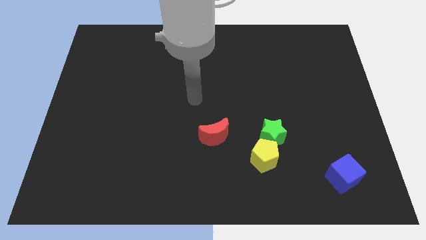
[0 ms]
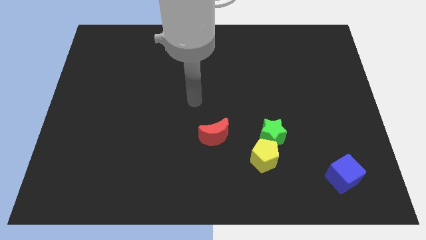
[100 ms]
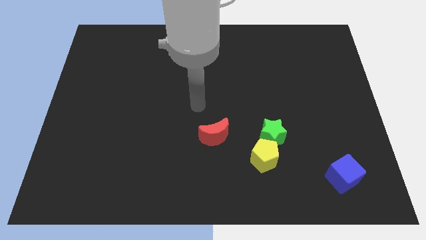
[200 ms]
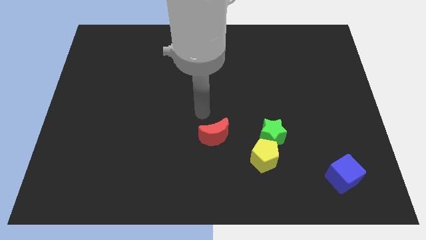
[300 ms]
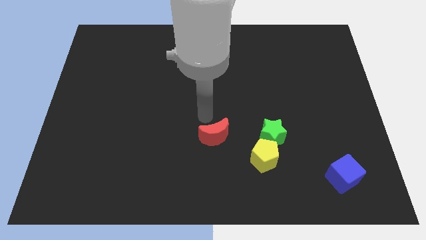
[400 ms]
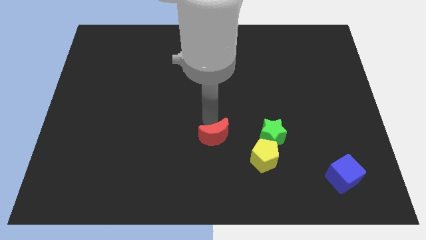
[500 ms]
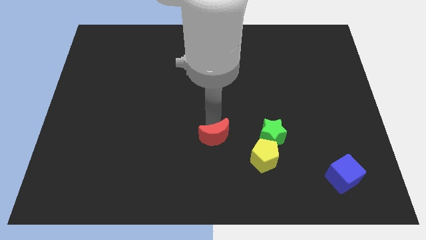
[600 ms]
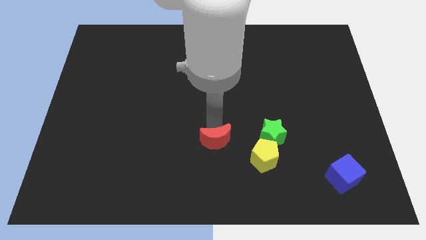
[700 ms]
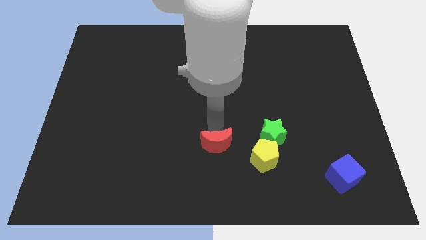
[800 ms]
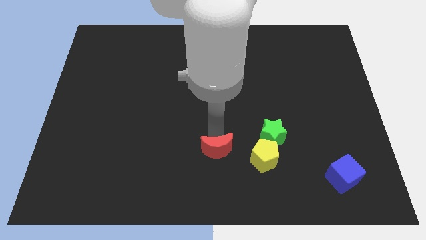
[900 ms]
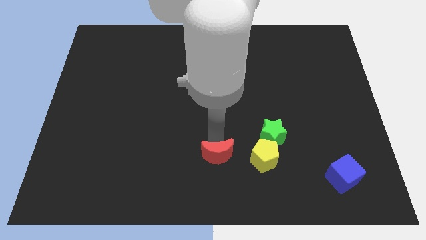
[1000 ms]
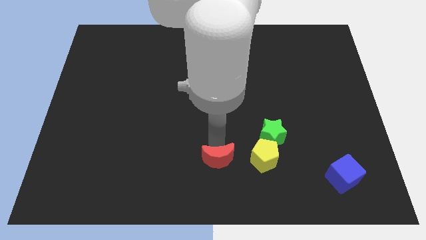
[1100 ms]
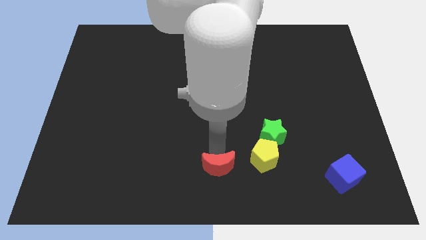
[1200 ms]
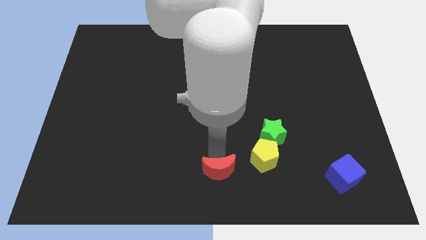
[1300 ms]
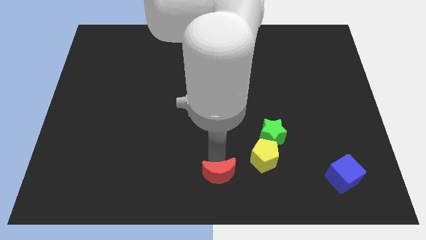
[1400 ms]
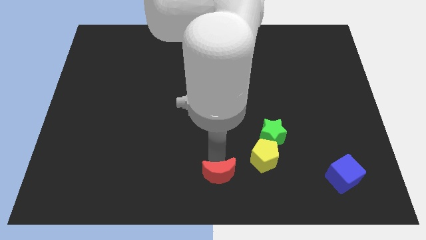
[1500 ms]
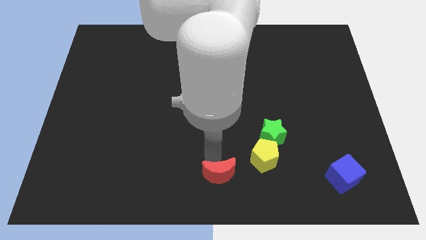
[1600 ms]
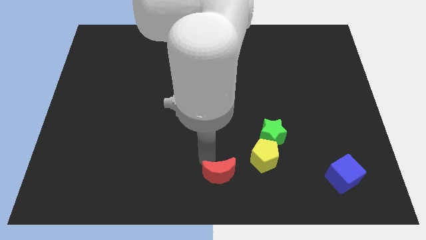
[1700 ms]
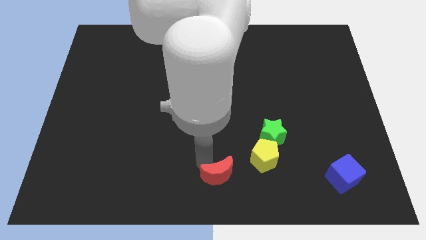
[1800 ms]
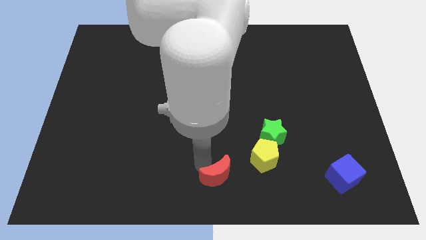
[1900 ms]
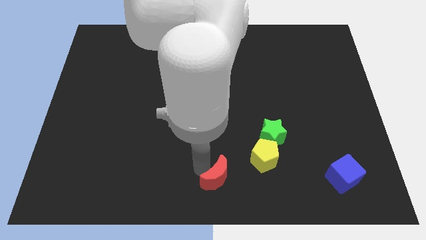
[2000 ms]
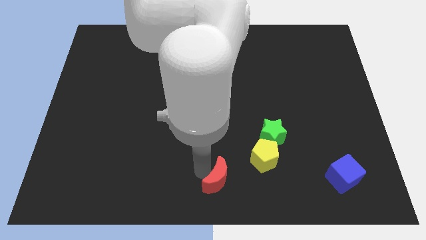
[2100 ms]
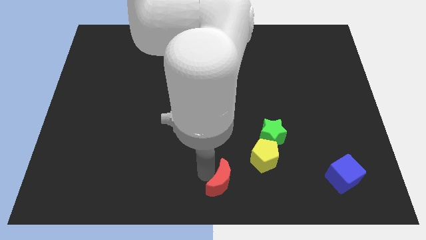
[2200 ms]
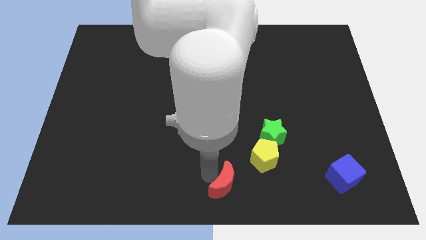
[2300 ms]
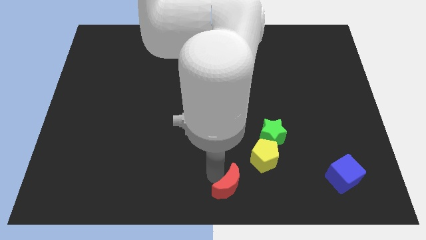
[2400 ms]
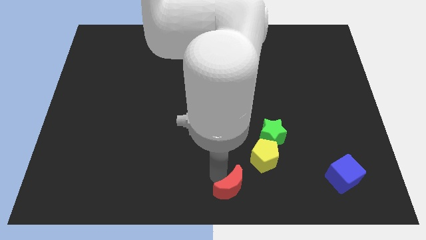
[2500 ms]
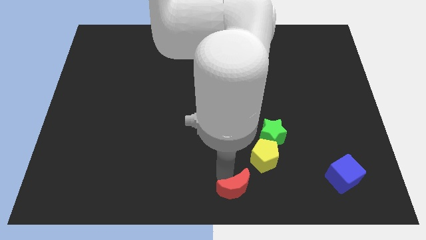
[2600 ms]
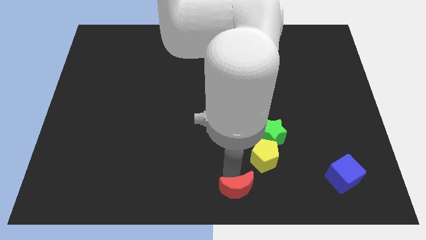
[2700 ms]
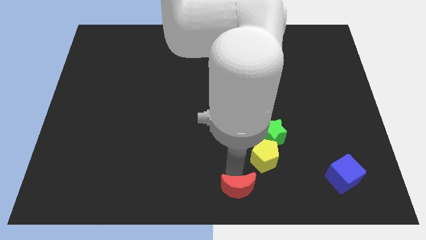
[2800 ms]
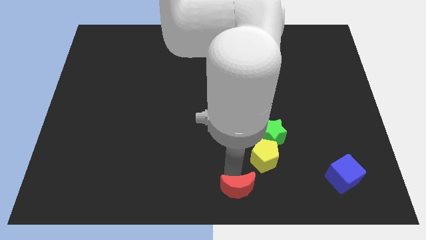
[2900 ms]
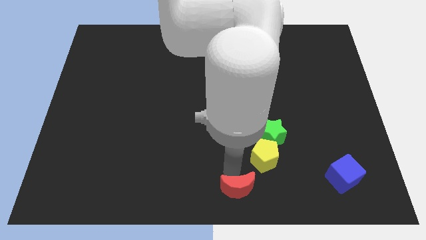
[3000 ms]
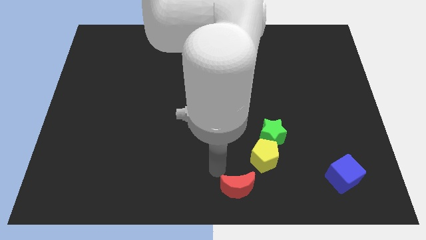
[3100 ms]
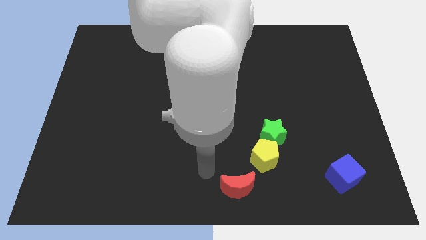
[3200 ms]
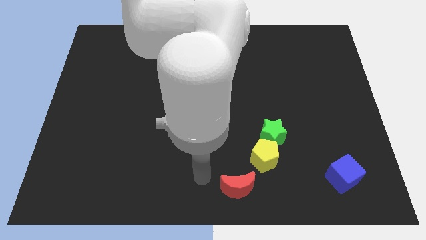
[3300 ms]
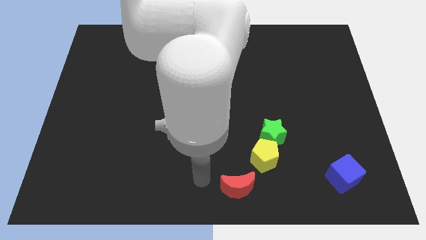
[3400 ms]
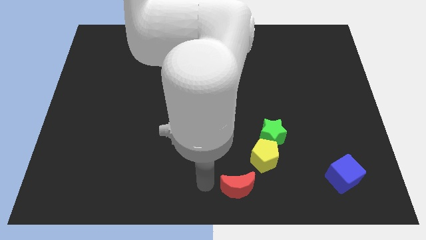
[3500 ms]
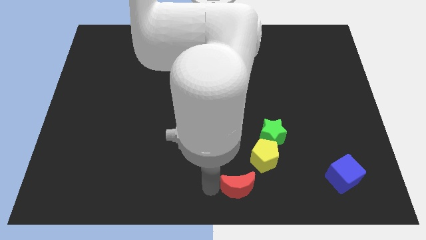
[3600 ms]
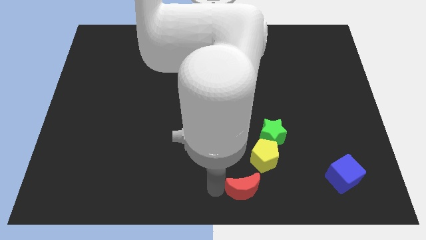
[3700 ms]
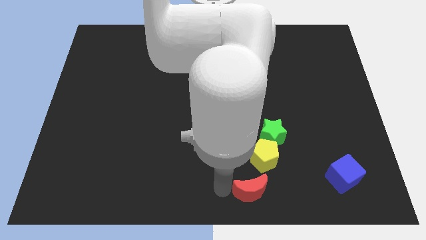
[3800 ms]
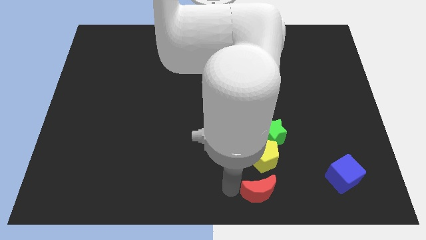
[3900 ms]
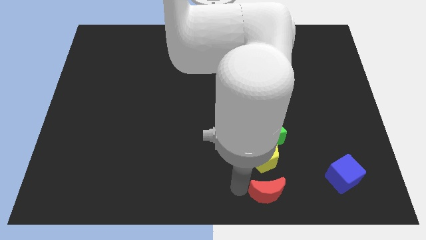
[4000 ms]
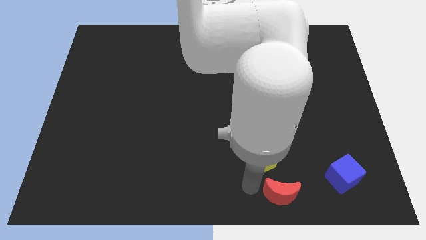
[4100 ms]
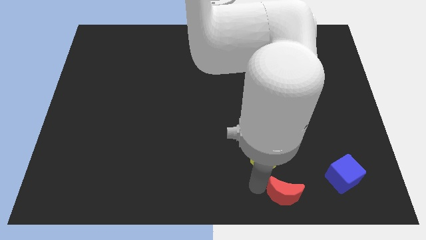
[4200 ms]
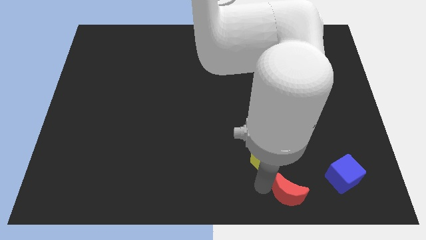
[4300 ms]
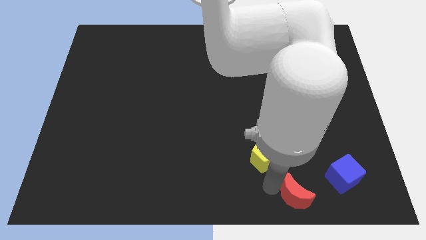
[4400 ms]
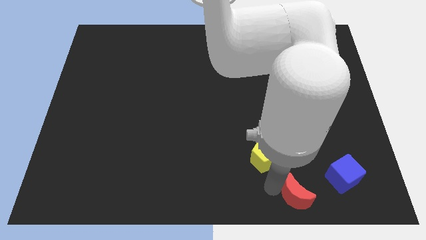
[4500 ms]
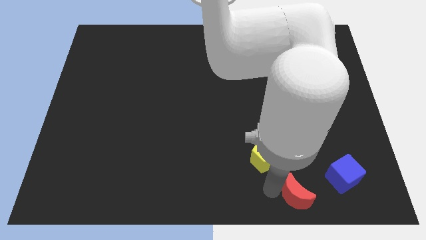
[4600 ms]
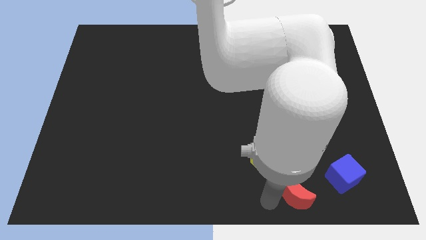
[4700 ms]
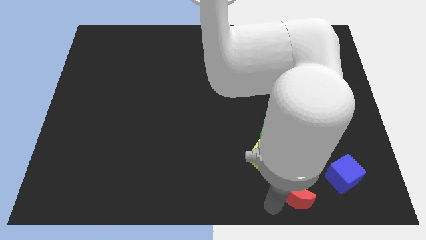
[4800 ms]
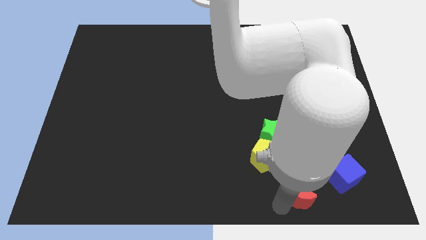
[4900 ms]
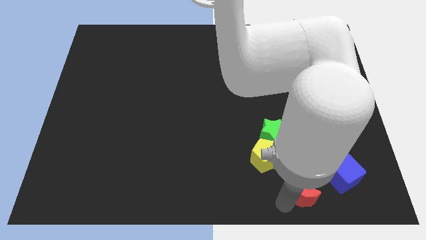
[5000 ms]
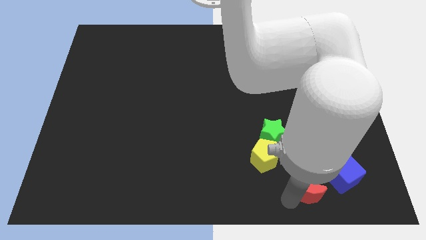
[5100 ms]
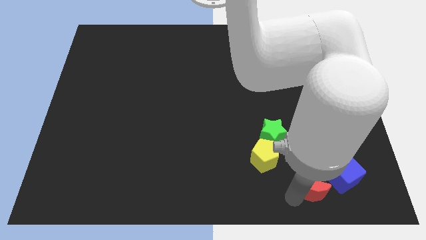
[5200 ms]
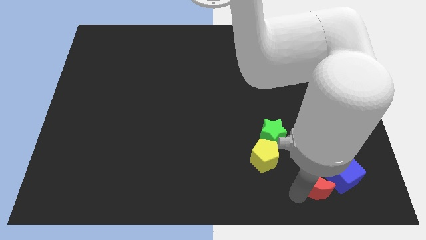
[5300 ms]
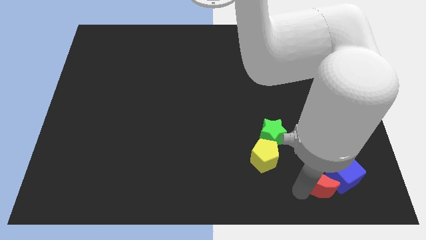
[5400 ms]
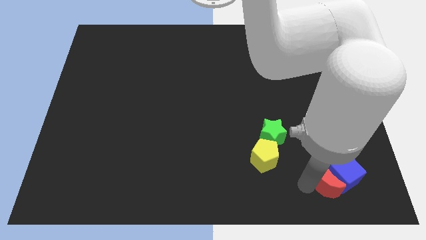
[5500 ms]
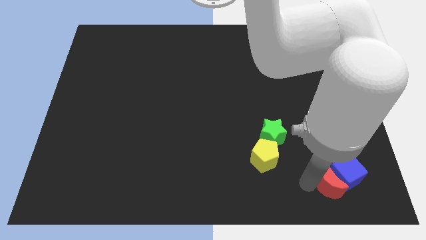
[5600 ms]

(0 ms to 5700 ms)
slide the moon towards the blue cube

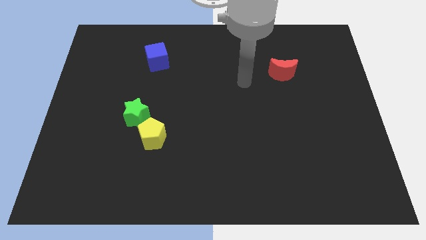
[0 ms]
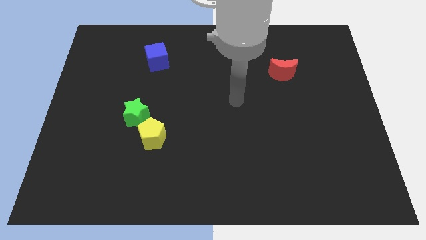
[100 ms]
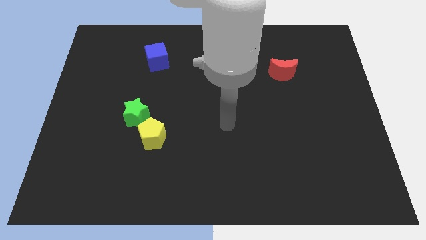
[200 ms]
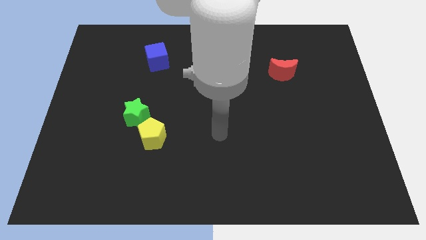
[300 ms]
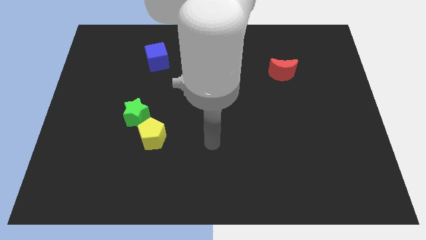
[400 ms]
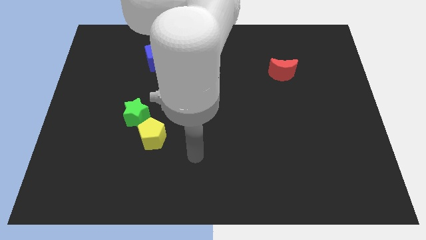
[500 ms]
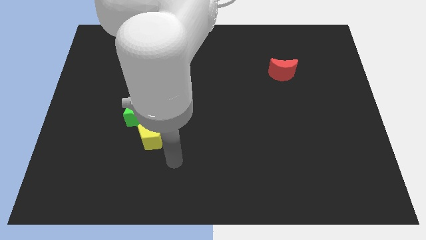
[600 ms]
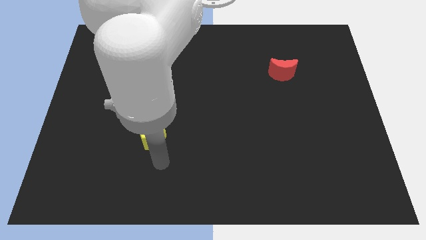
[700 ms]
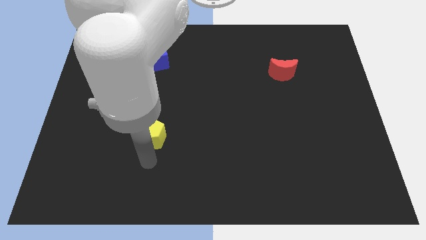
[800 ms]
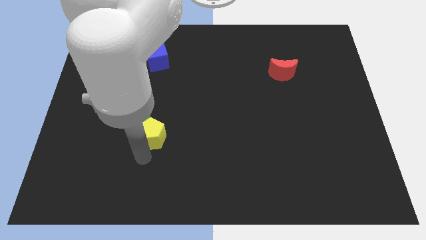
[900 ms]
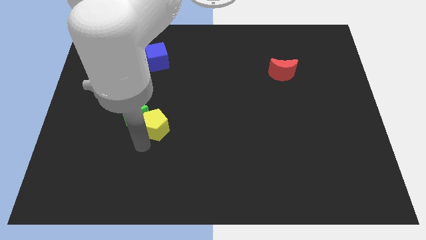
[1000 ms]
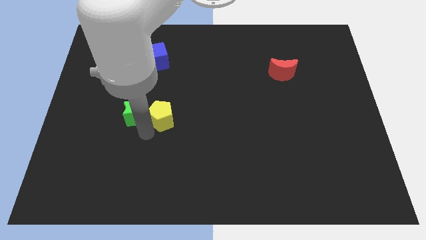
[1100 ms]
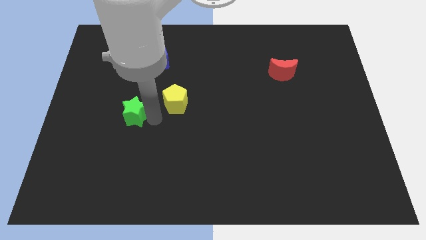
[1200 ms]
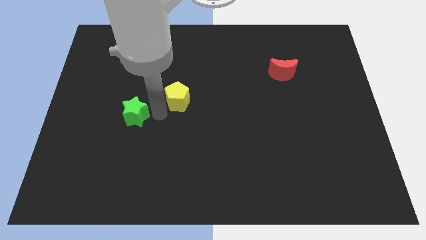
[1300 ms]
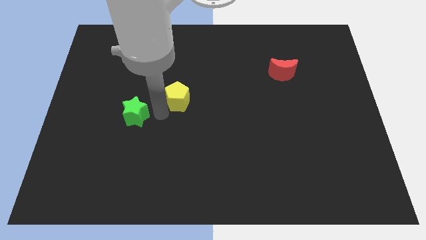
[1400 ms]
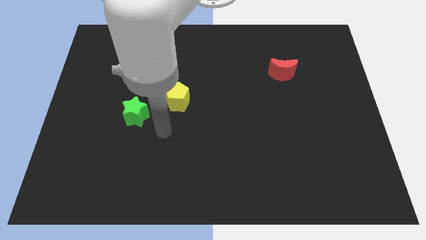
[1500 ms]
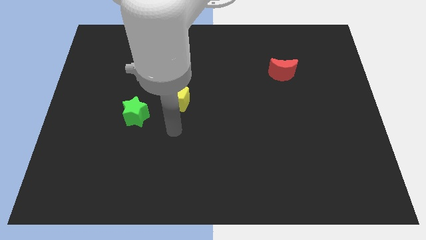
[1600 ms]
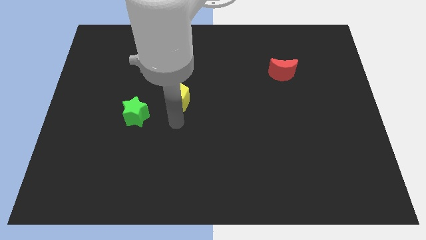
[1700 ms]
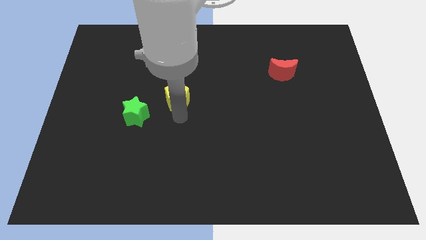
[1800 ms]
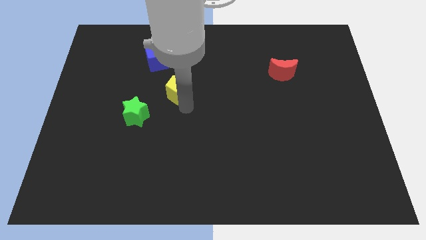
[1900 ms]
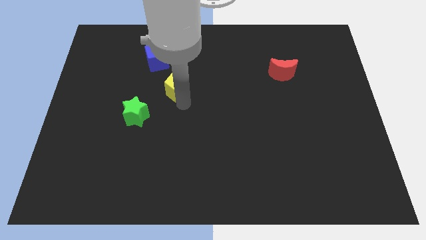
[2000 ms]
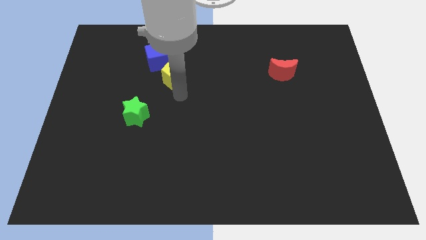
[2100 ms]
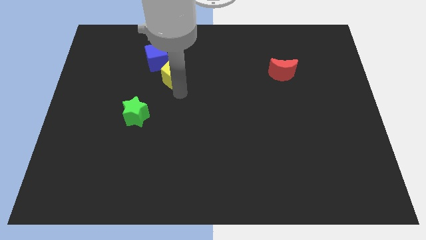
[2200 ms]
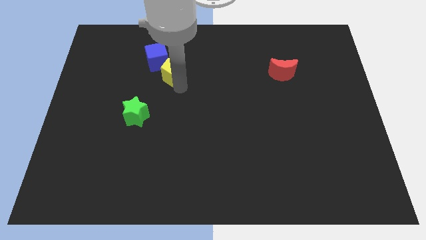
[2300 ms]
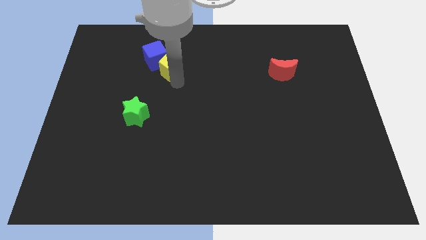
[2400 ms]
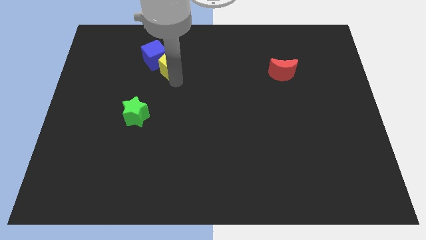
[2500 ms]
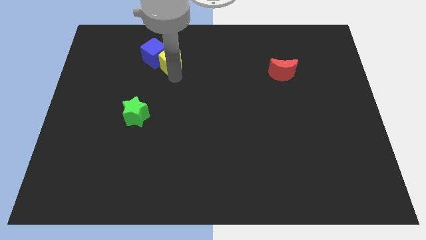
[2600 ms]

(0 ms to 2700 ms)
push the pentagon next to the cube
